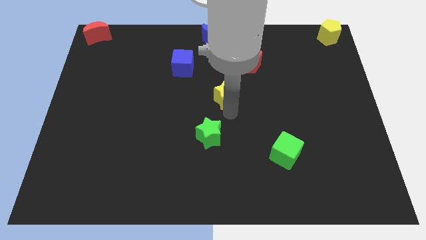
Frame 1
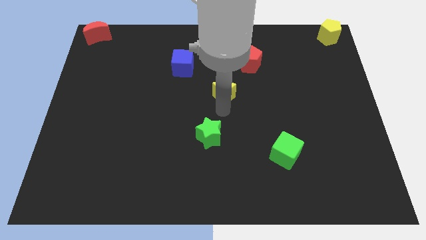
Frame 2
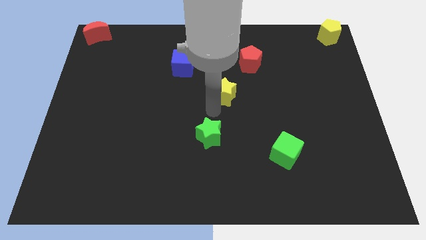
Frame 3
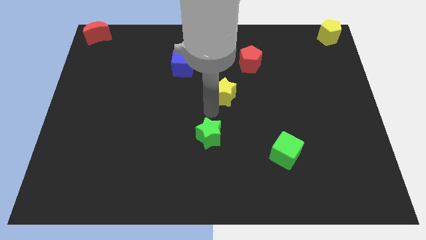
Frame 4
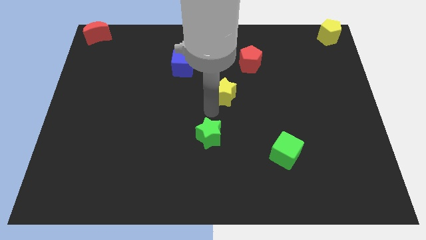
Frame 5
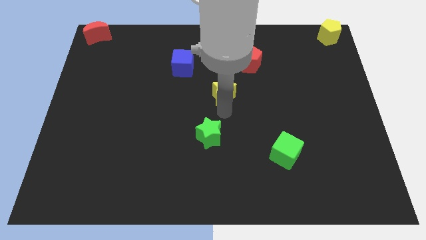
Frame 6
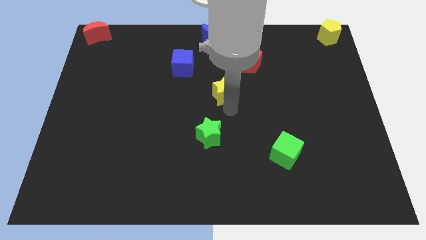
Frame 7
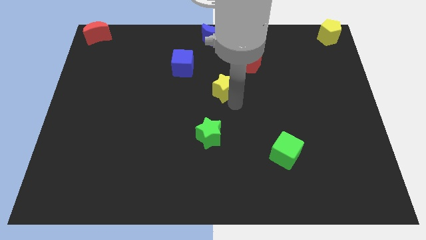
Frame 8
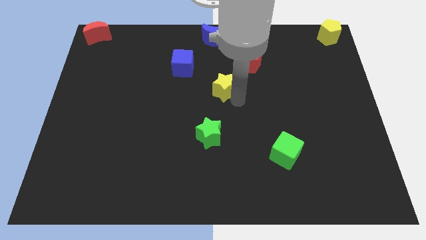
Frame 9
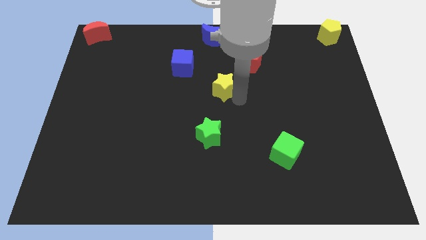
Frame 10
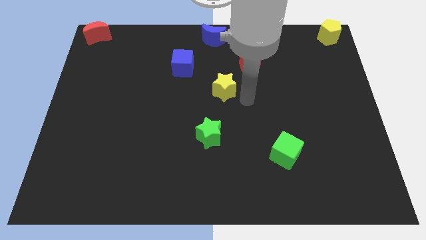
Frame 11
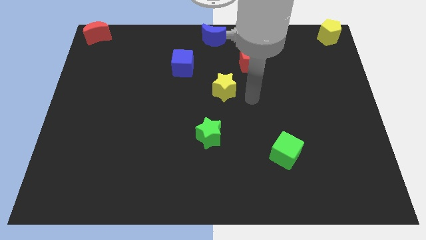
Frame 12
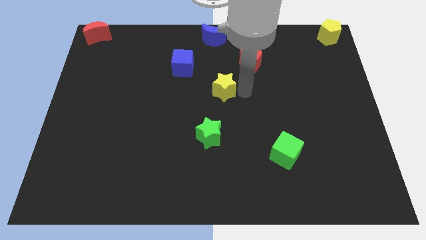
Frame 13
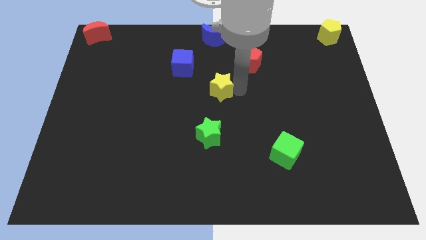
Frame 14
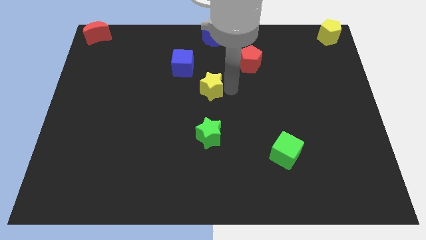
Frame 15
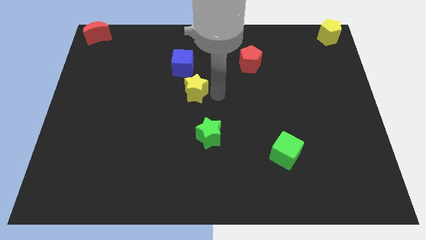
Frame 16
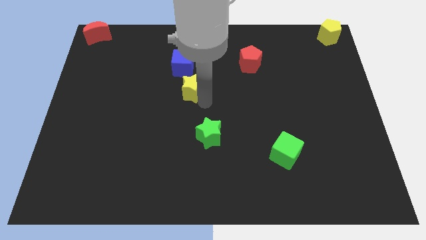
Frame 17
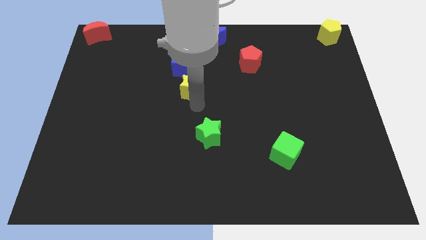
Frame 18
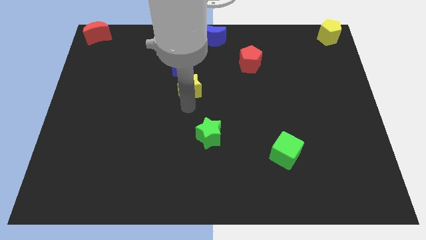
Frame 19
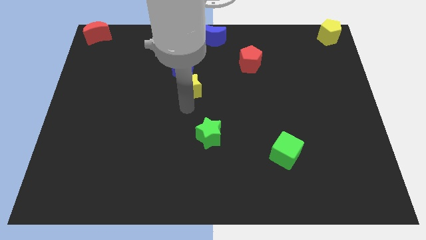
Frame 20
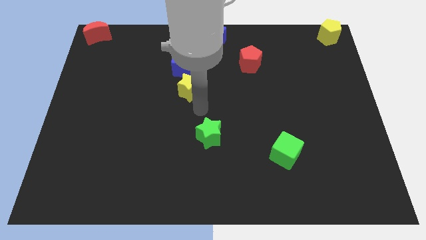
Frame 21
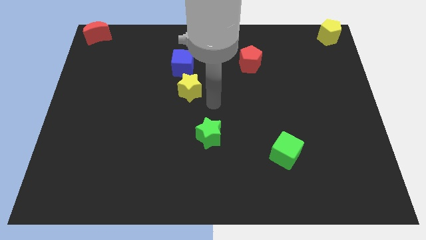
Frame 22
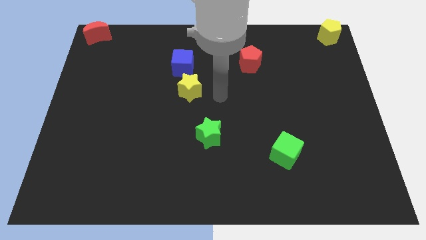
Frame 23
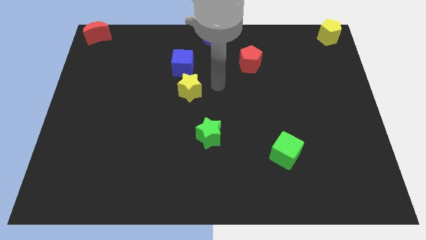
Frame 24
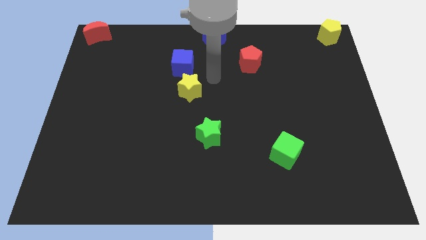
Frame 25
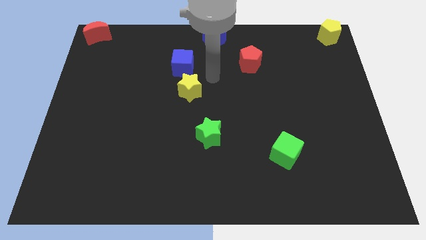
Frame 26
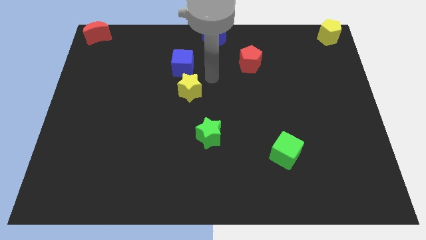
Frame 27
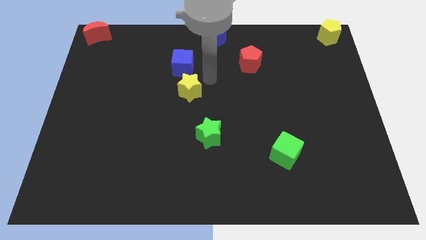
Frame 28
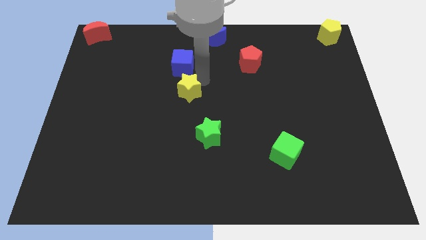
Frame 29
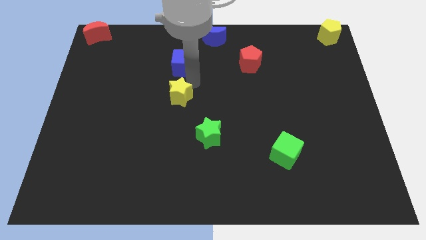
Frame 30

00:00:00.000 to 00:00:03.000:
place the yellow star below the blue cube

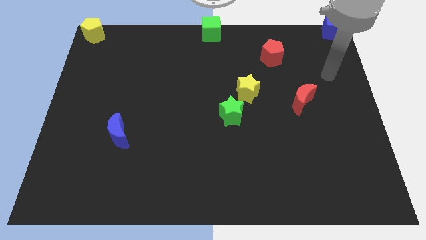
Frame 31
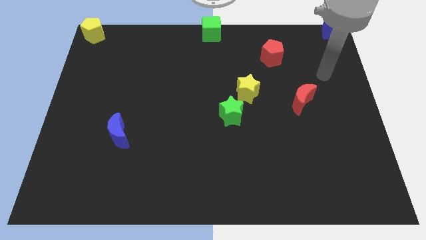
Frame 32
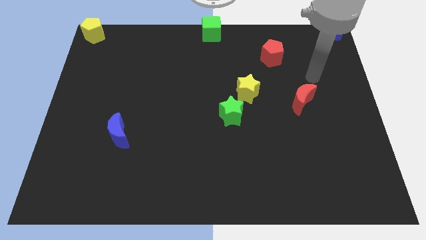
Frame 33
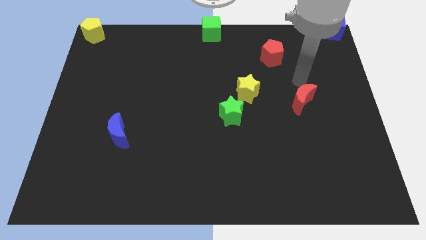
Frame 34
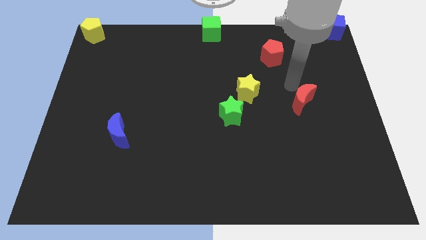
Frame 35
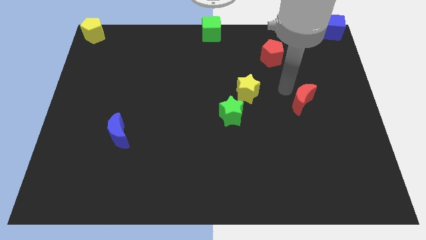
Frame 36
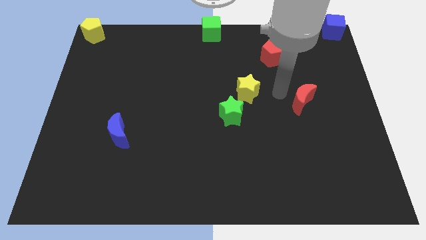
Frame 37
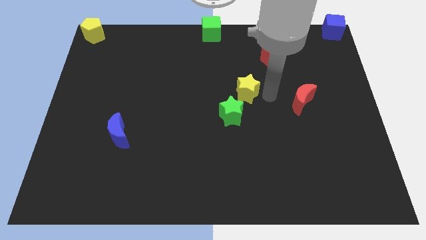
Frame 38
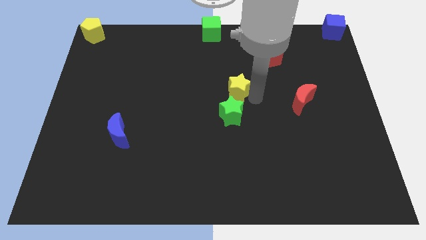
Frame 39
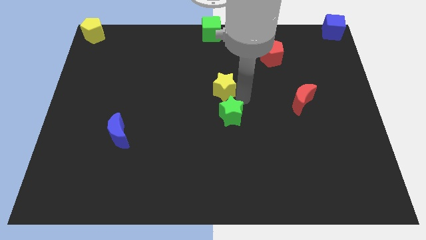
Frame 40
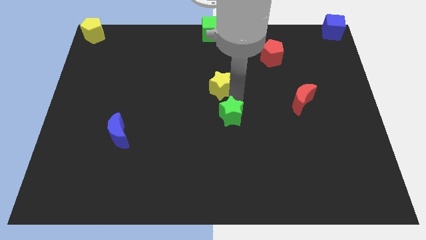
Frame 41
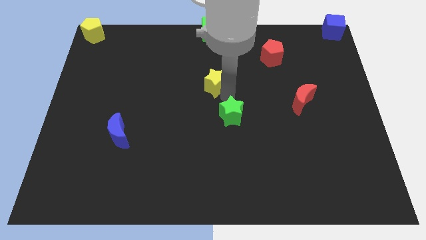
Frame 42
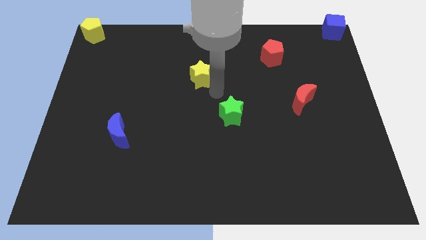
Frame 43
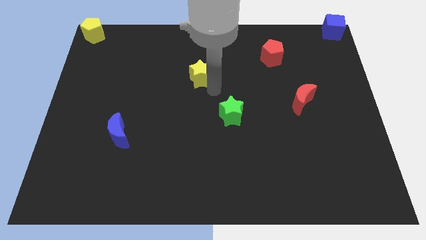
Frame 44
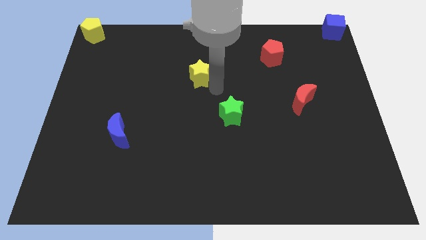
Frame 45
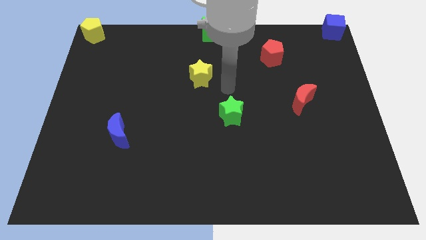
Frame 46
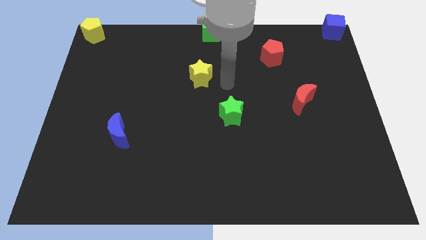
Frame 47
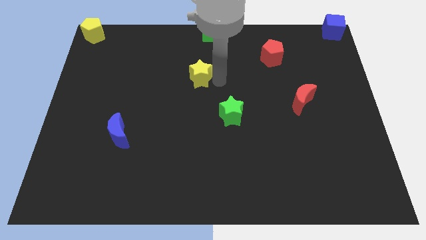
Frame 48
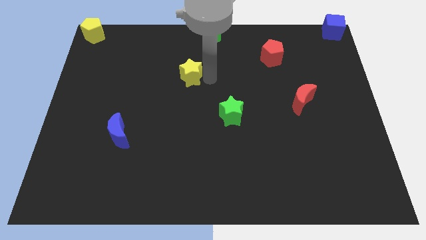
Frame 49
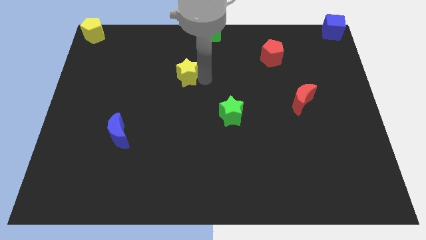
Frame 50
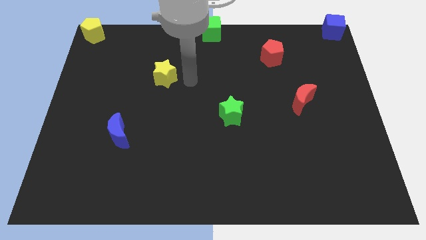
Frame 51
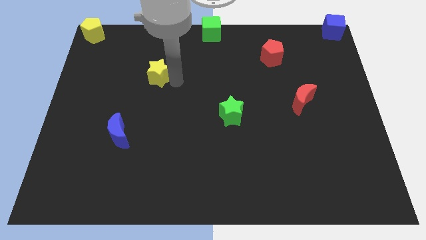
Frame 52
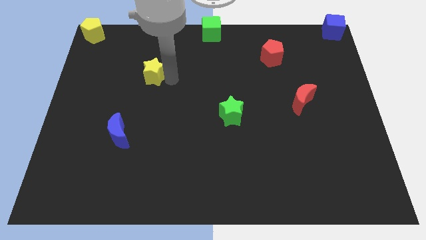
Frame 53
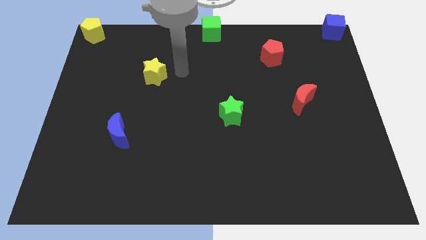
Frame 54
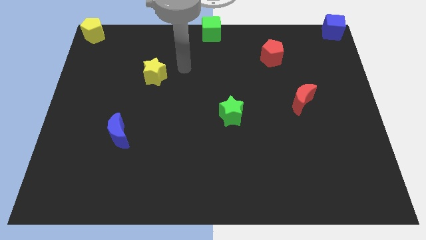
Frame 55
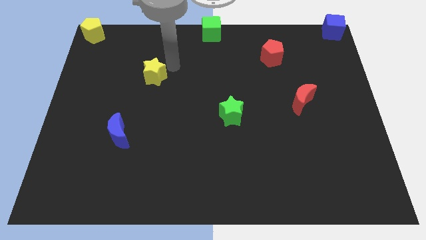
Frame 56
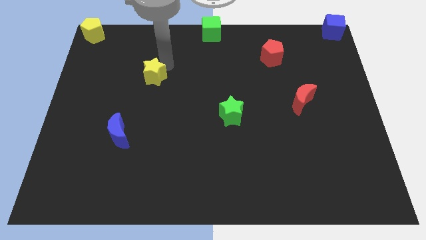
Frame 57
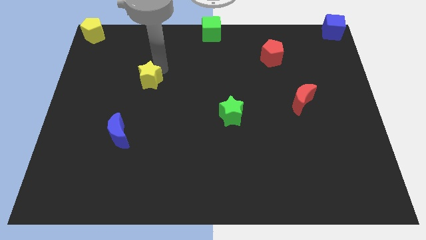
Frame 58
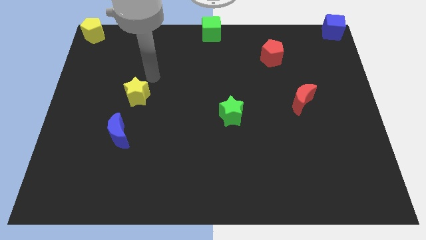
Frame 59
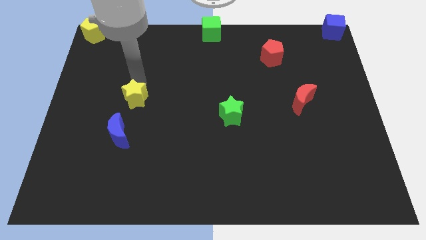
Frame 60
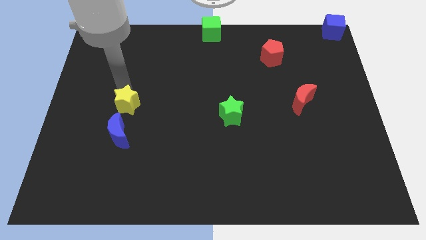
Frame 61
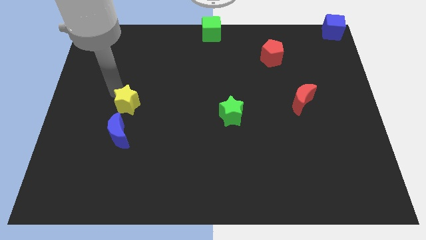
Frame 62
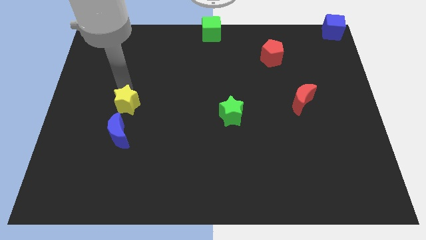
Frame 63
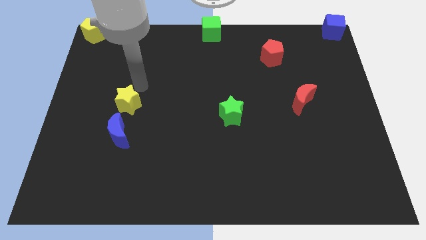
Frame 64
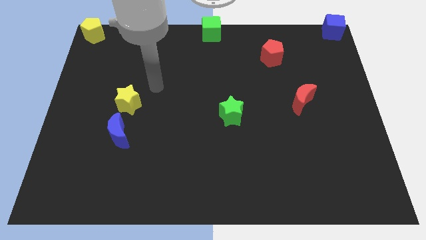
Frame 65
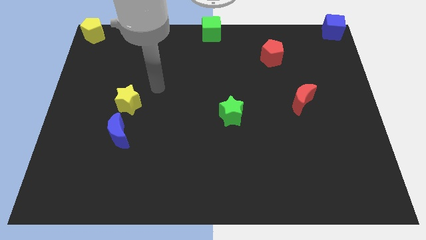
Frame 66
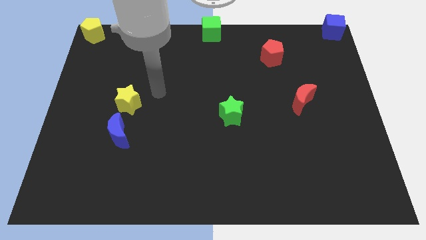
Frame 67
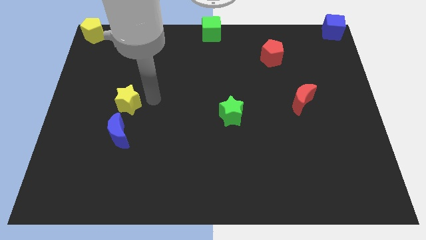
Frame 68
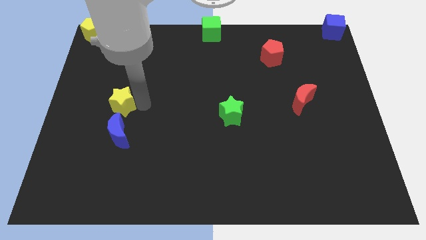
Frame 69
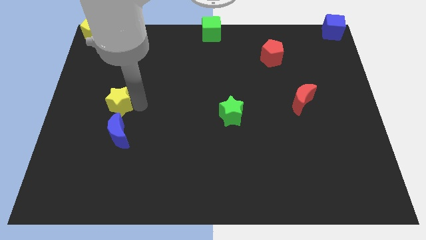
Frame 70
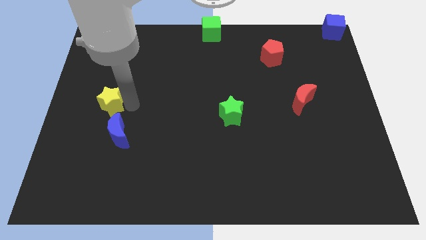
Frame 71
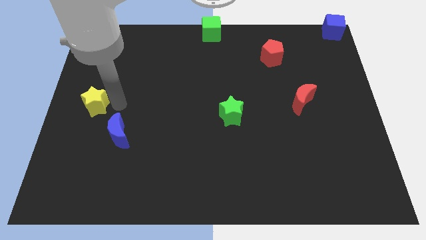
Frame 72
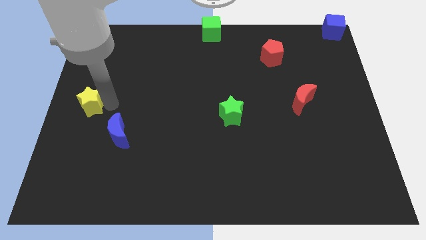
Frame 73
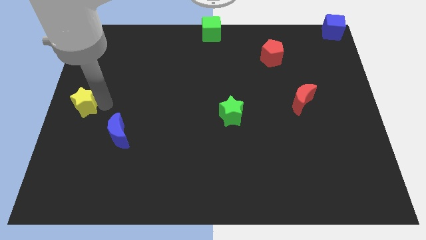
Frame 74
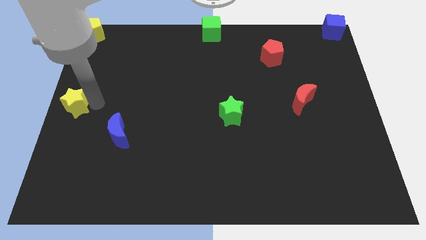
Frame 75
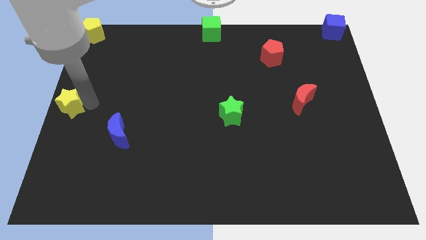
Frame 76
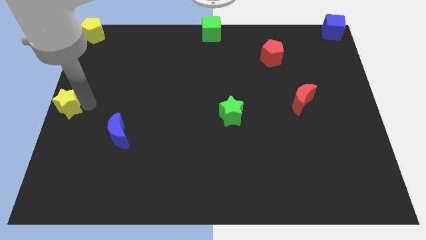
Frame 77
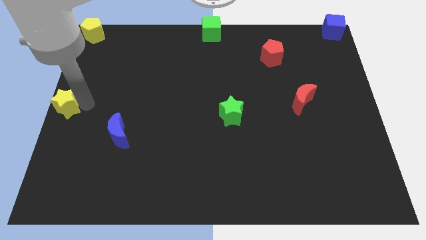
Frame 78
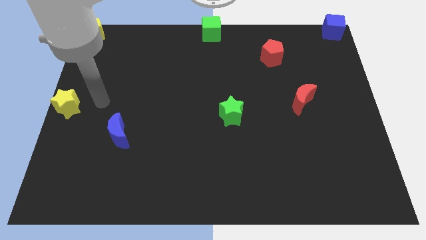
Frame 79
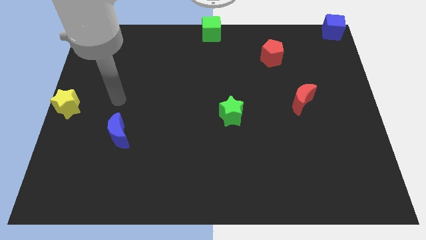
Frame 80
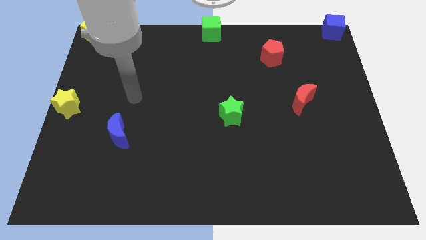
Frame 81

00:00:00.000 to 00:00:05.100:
push the yellow star to the left center of the board

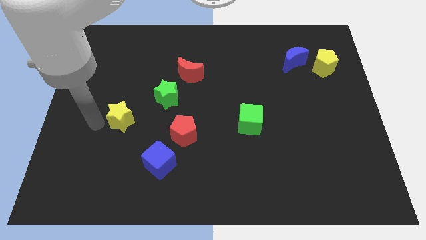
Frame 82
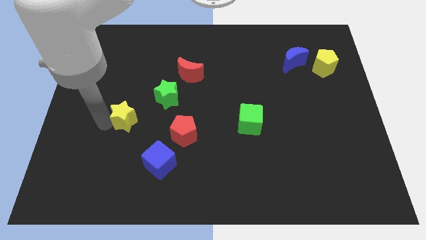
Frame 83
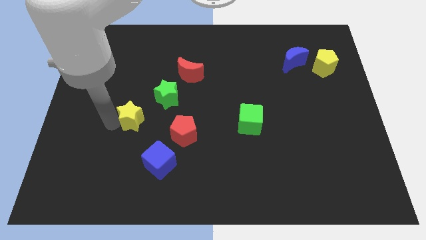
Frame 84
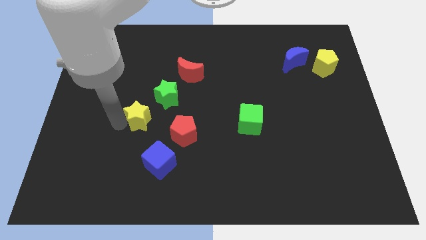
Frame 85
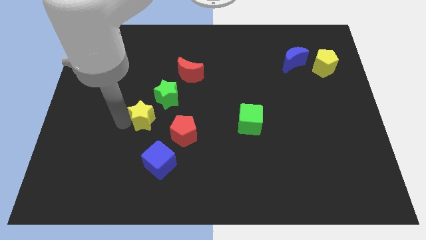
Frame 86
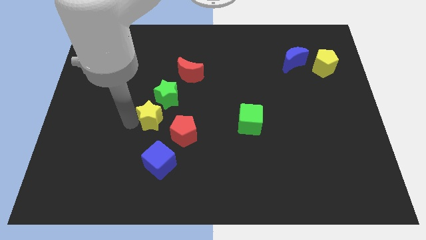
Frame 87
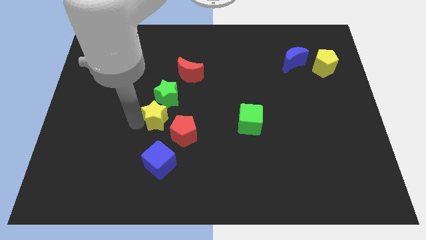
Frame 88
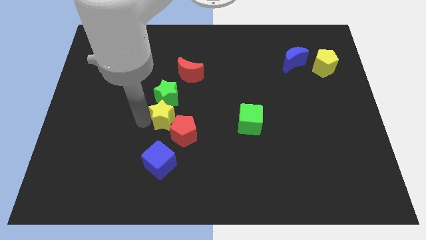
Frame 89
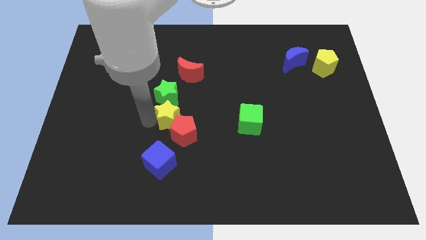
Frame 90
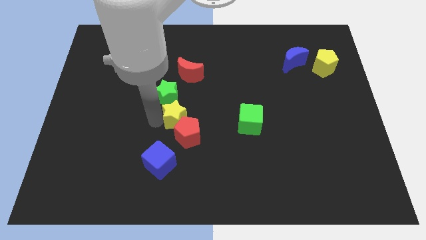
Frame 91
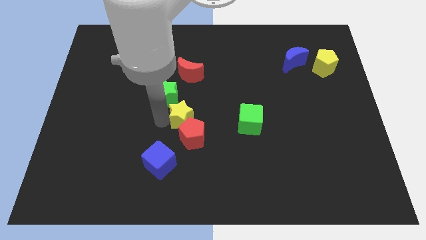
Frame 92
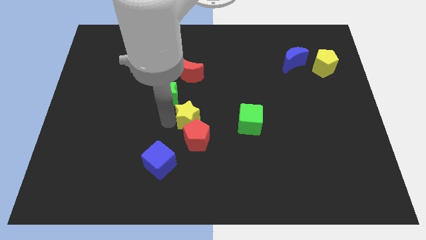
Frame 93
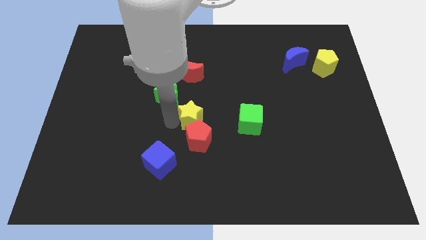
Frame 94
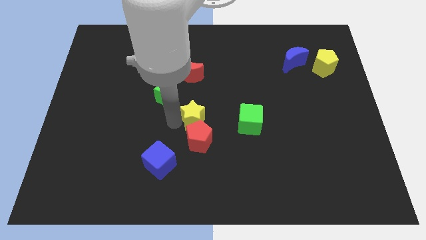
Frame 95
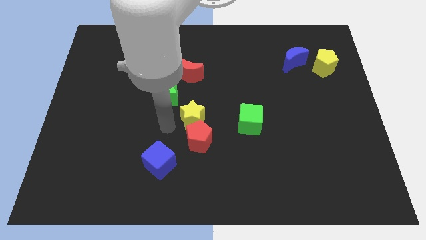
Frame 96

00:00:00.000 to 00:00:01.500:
move the yellow star above to the red pentagon
